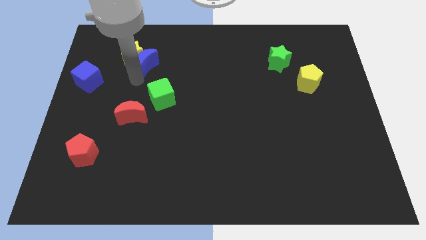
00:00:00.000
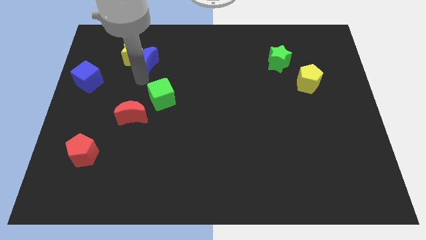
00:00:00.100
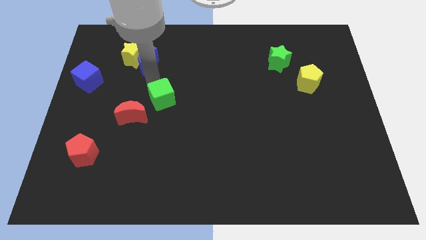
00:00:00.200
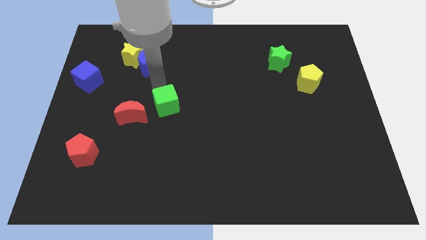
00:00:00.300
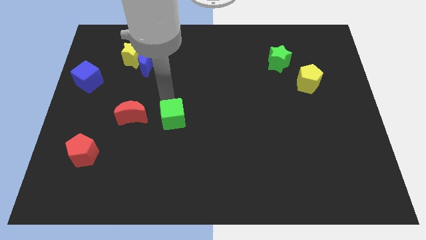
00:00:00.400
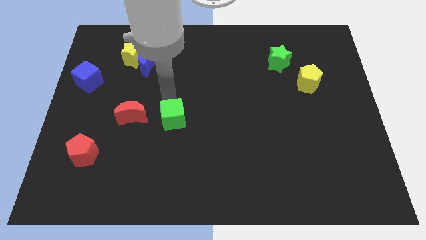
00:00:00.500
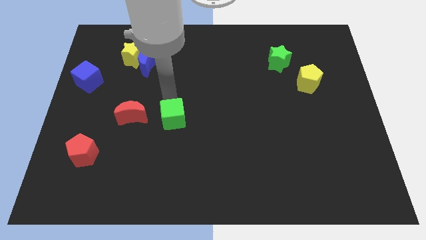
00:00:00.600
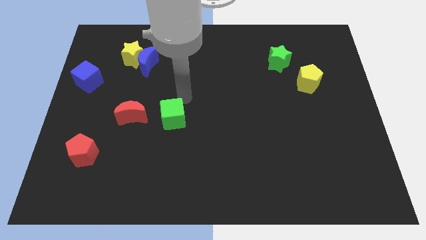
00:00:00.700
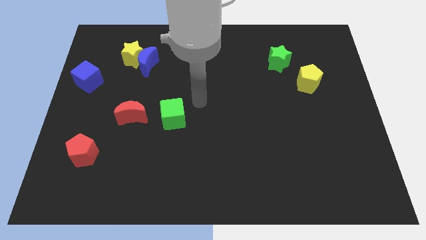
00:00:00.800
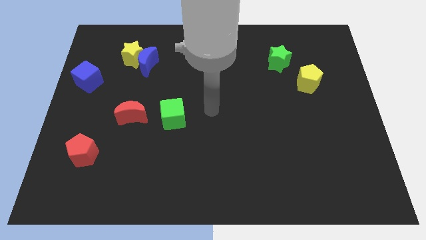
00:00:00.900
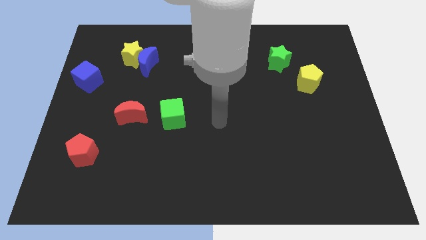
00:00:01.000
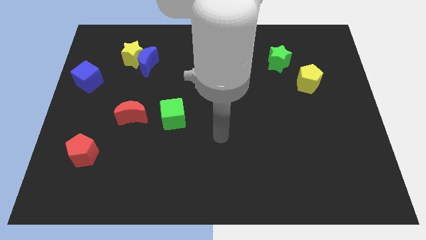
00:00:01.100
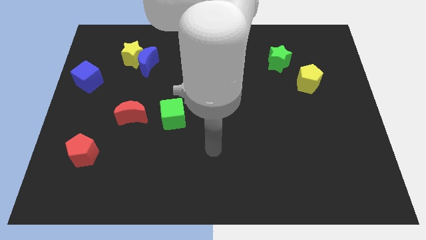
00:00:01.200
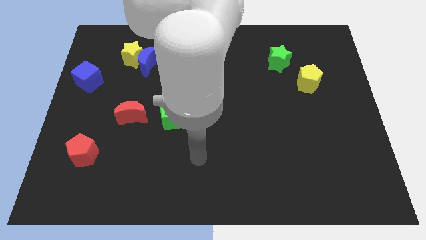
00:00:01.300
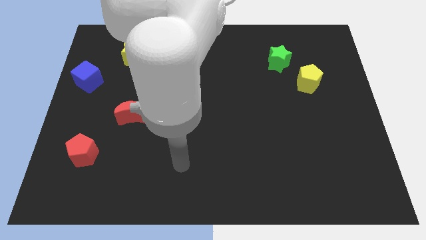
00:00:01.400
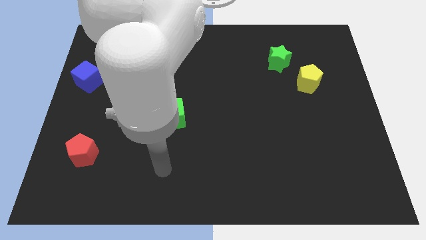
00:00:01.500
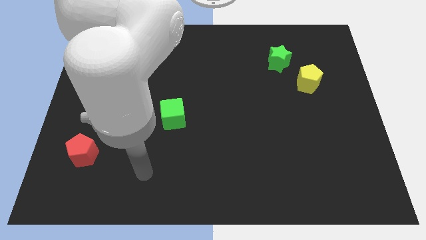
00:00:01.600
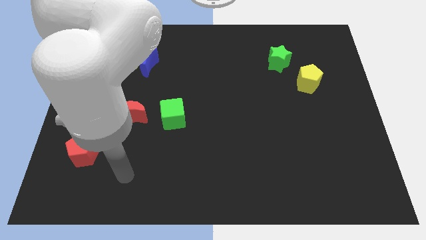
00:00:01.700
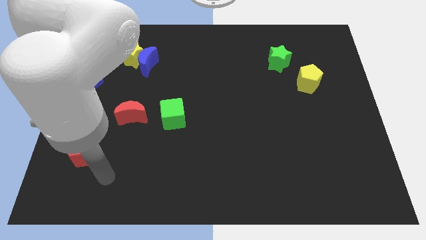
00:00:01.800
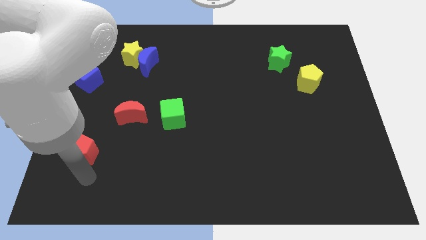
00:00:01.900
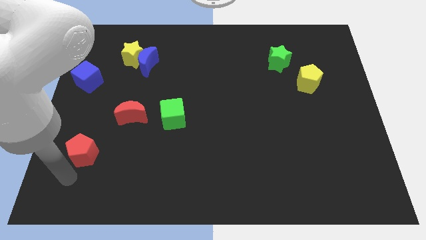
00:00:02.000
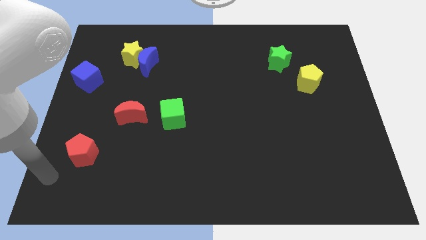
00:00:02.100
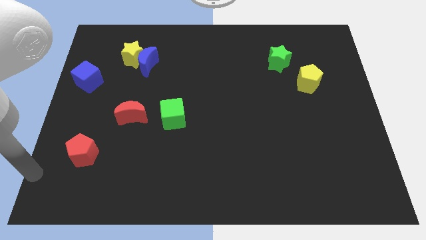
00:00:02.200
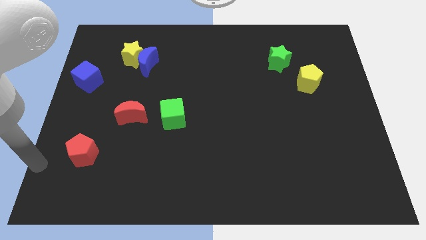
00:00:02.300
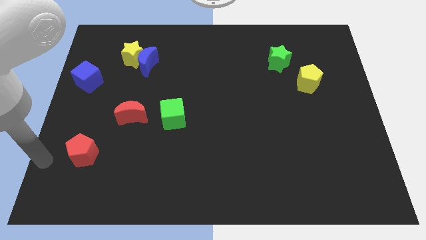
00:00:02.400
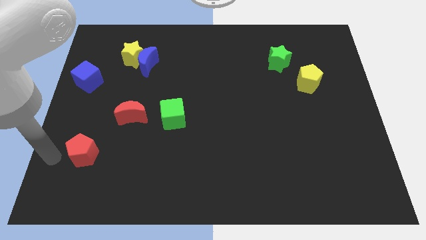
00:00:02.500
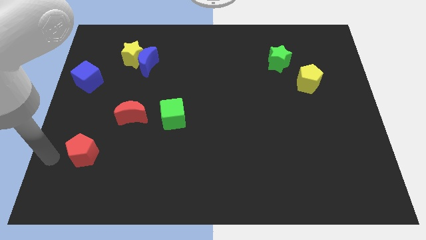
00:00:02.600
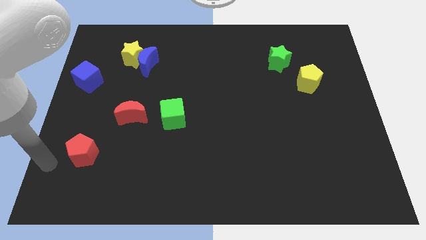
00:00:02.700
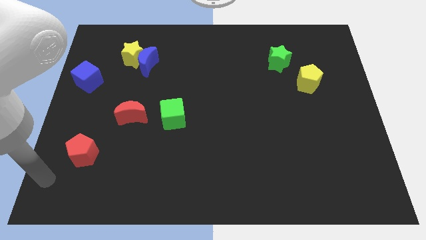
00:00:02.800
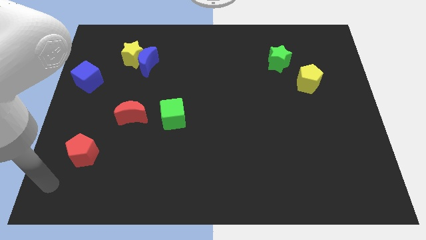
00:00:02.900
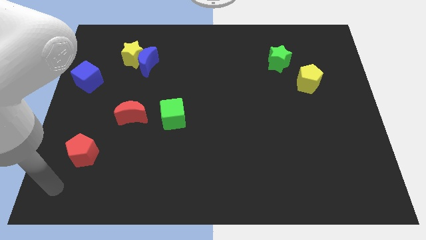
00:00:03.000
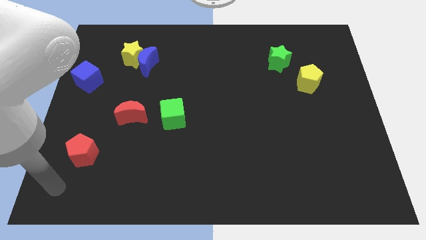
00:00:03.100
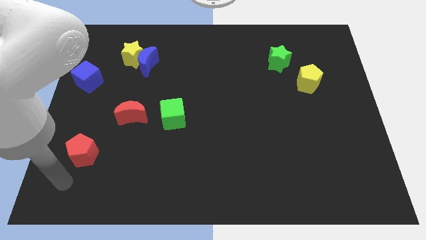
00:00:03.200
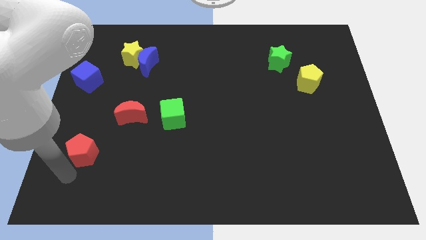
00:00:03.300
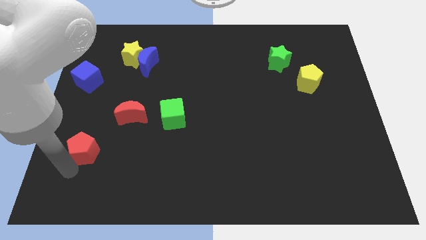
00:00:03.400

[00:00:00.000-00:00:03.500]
place the green cube horizontally to the right side of the red crescent

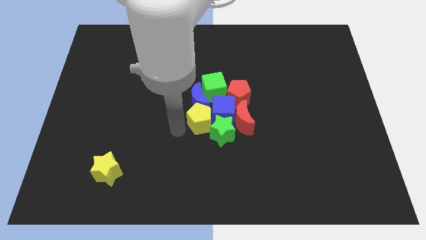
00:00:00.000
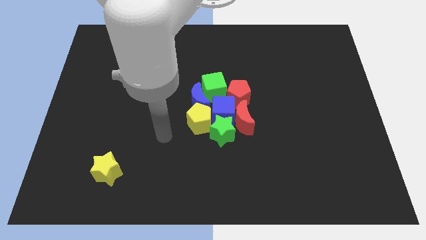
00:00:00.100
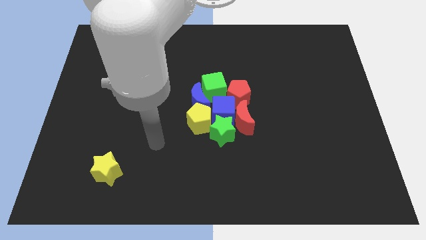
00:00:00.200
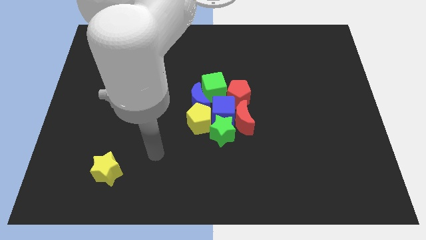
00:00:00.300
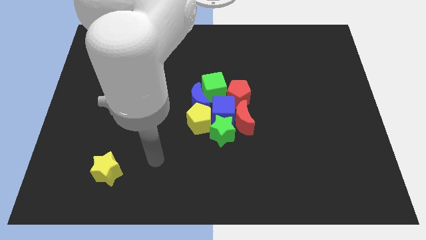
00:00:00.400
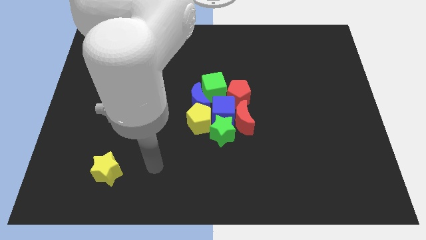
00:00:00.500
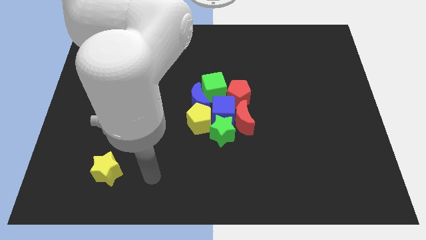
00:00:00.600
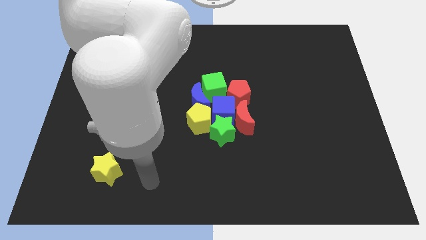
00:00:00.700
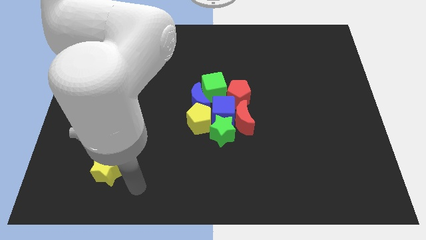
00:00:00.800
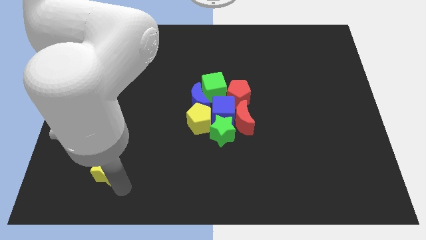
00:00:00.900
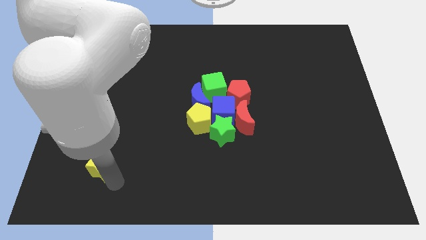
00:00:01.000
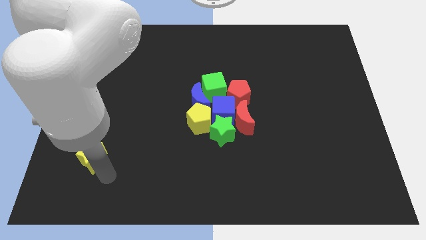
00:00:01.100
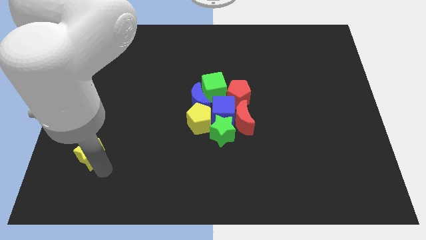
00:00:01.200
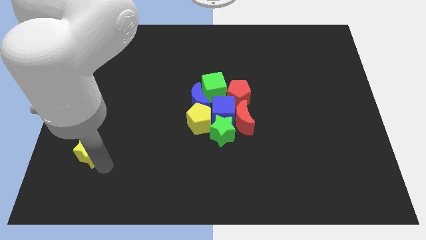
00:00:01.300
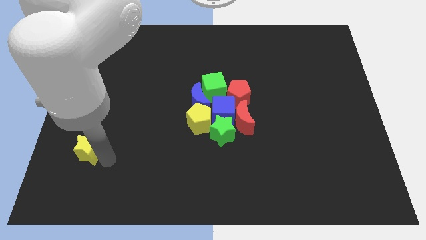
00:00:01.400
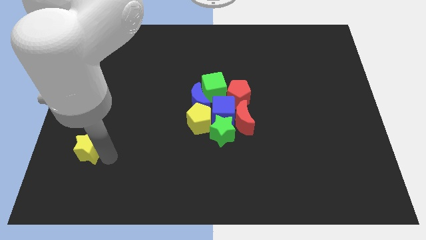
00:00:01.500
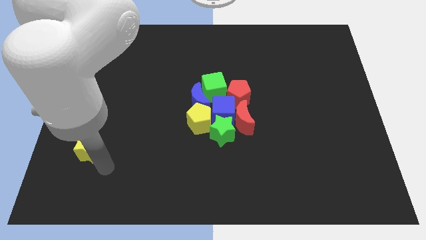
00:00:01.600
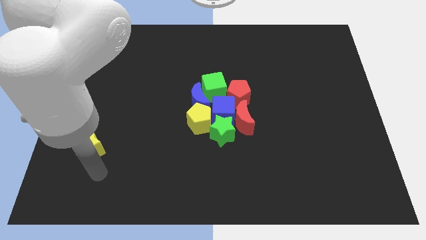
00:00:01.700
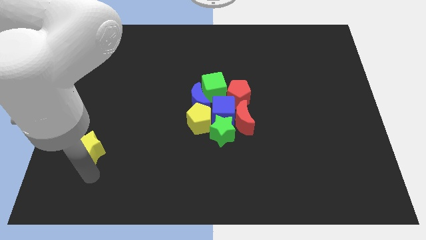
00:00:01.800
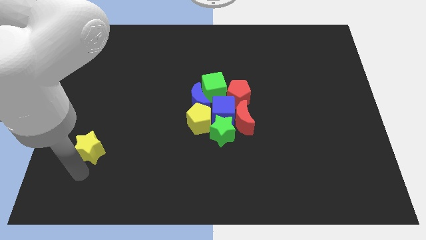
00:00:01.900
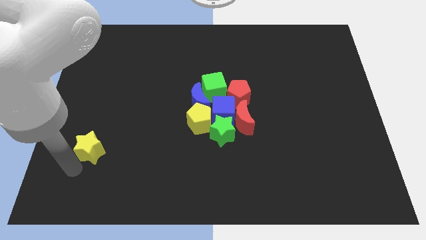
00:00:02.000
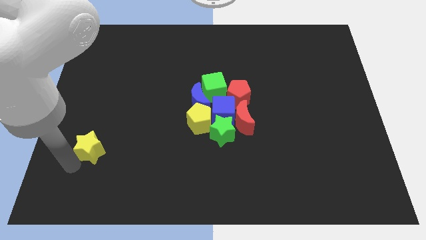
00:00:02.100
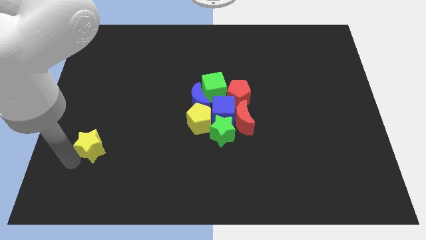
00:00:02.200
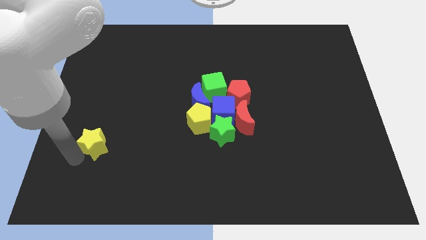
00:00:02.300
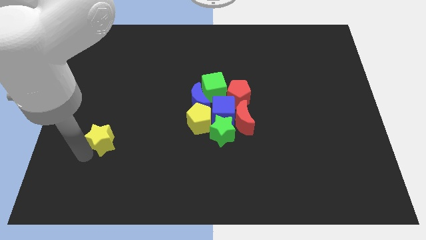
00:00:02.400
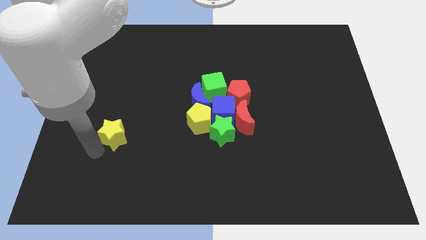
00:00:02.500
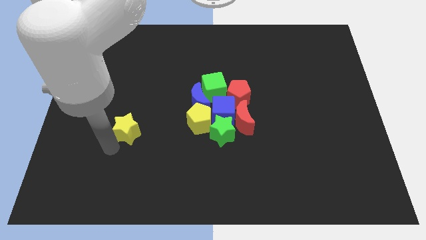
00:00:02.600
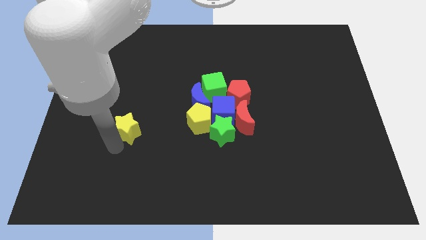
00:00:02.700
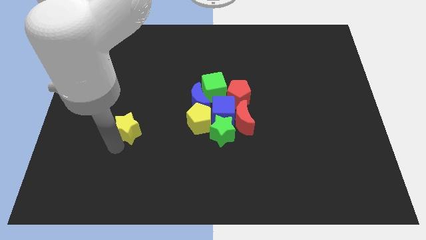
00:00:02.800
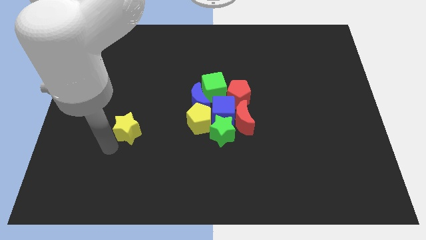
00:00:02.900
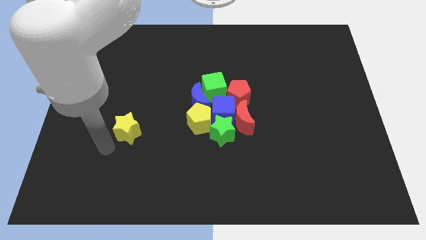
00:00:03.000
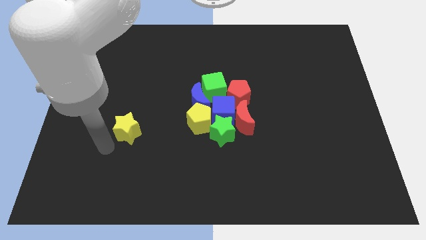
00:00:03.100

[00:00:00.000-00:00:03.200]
push the yellow star upward

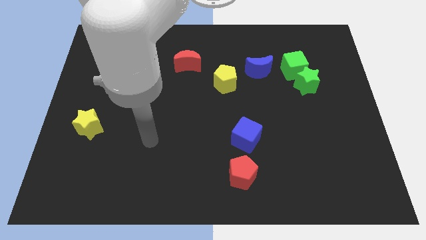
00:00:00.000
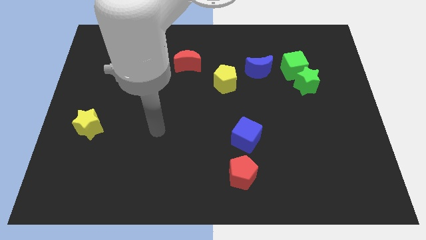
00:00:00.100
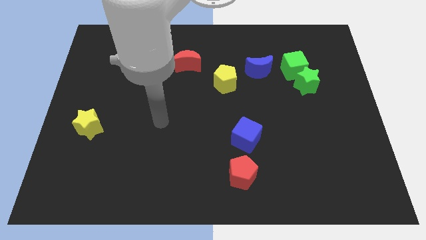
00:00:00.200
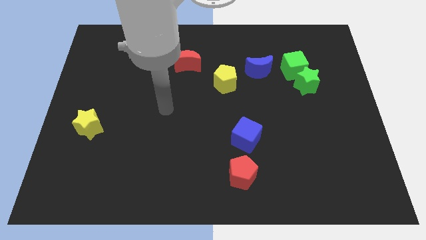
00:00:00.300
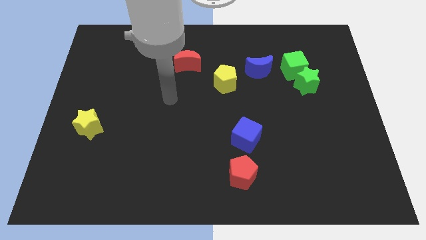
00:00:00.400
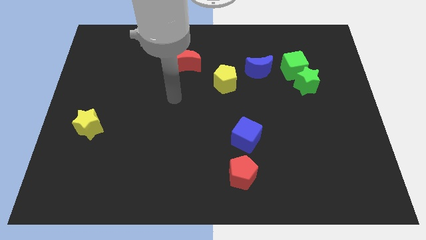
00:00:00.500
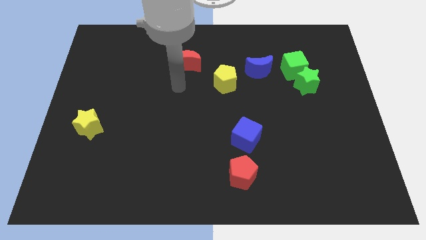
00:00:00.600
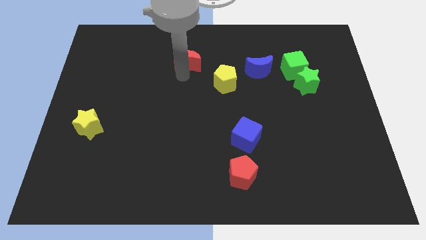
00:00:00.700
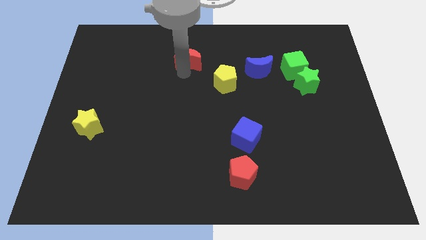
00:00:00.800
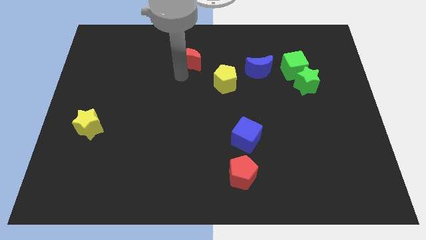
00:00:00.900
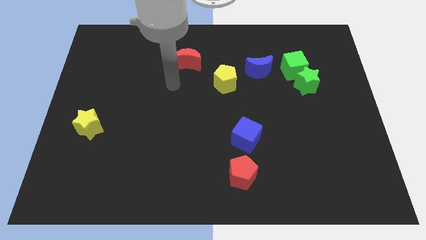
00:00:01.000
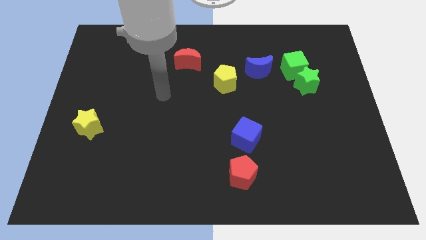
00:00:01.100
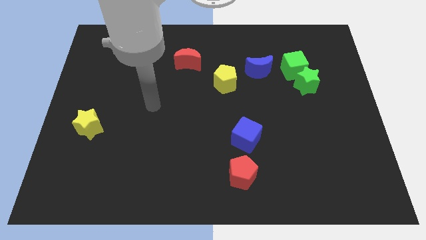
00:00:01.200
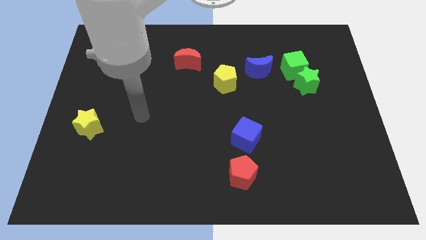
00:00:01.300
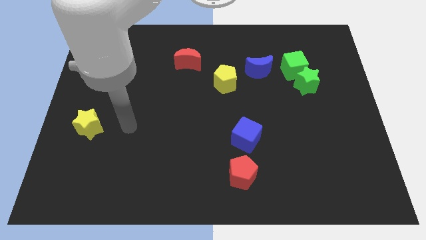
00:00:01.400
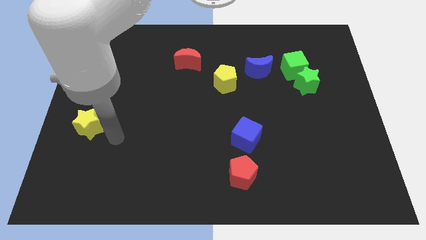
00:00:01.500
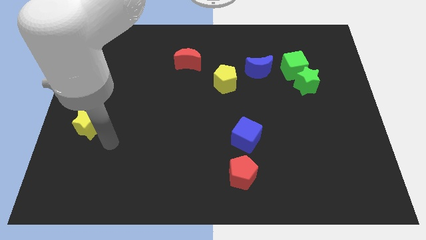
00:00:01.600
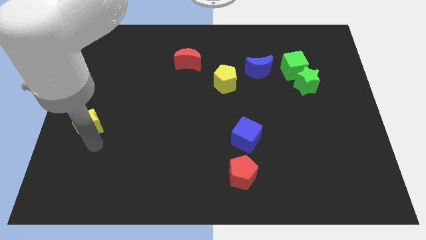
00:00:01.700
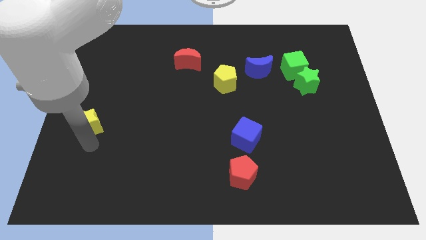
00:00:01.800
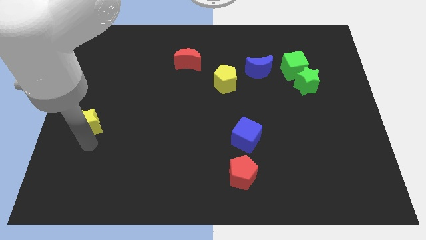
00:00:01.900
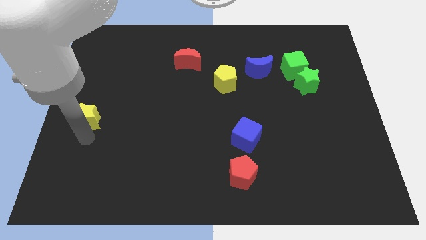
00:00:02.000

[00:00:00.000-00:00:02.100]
slightly touch red moon
